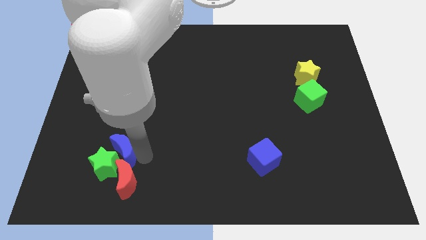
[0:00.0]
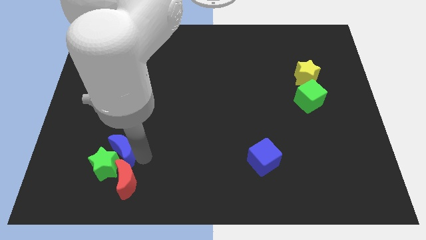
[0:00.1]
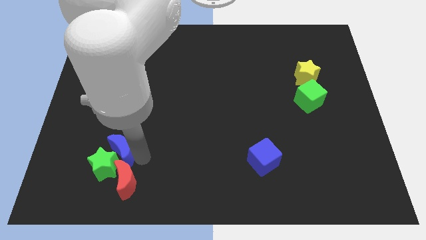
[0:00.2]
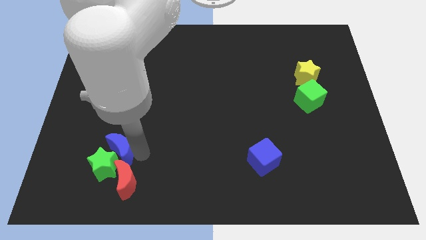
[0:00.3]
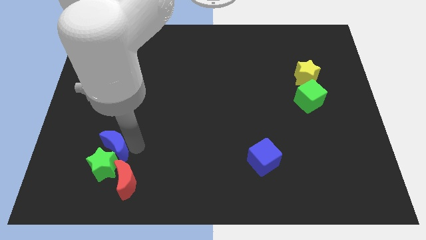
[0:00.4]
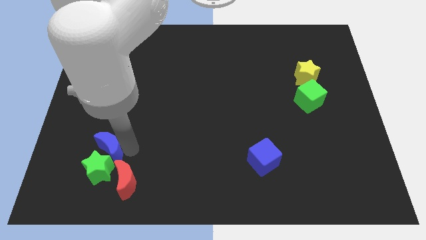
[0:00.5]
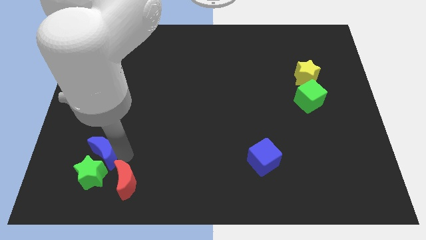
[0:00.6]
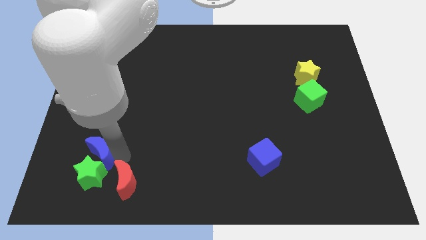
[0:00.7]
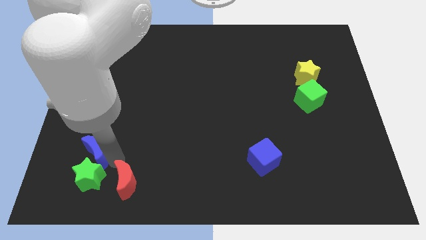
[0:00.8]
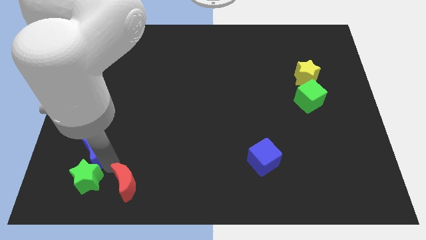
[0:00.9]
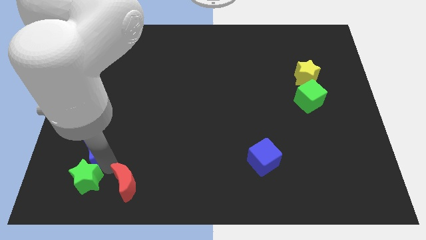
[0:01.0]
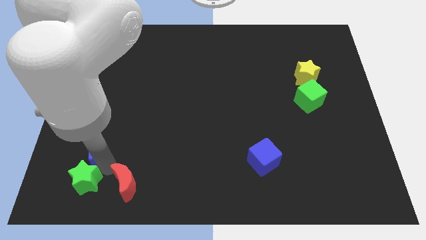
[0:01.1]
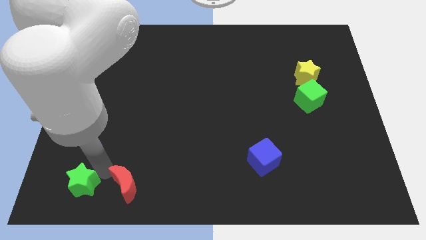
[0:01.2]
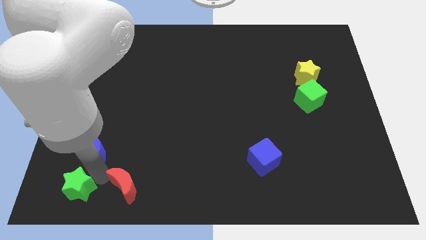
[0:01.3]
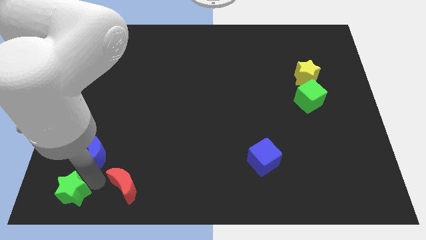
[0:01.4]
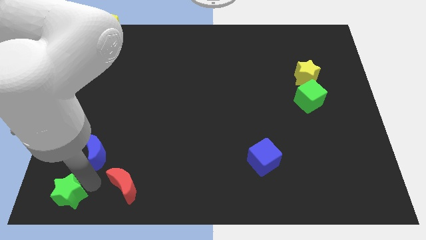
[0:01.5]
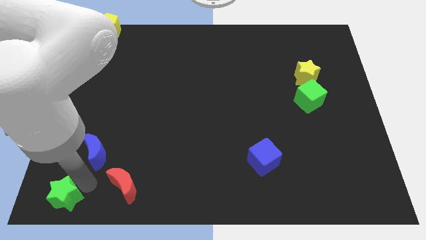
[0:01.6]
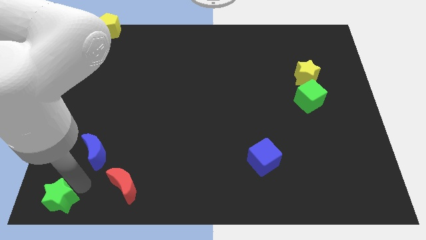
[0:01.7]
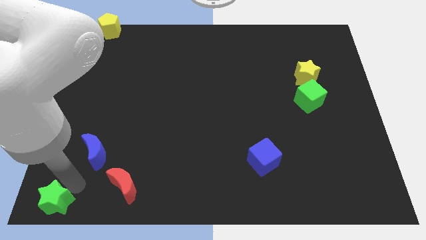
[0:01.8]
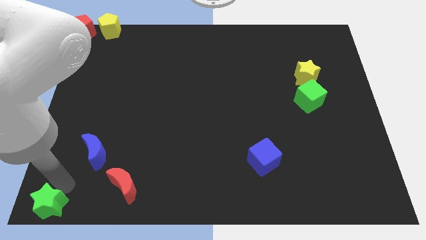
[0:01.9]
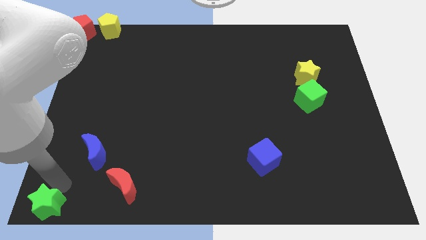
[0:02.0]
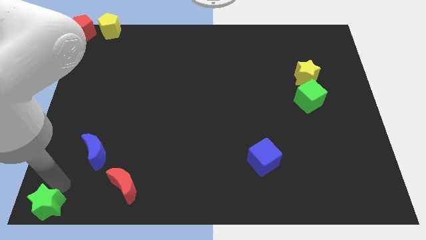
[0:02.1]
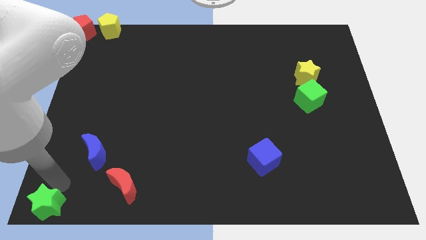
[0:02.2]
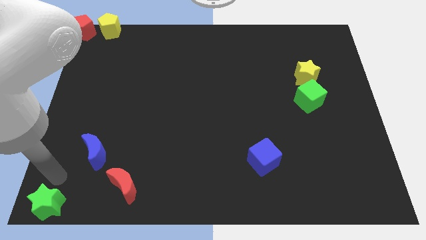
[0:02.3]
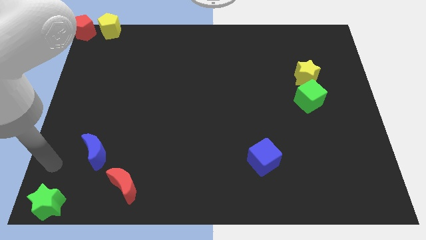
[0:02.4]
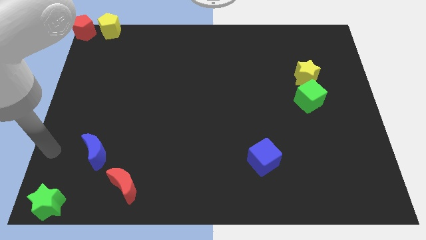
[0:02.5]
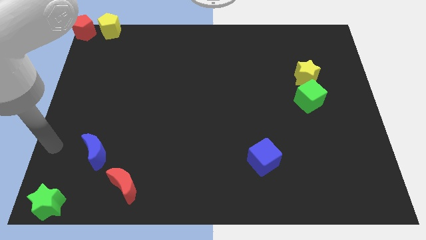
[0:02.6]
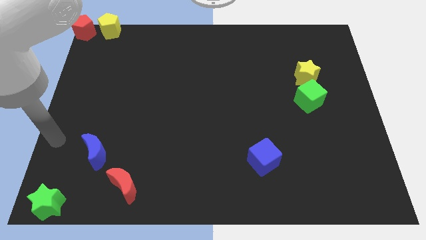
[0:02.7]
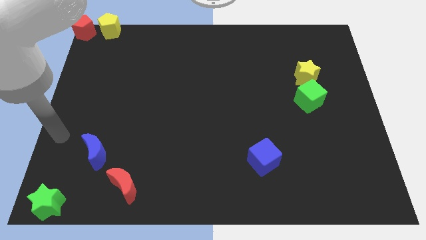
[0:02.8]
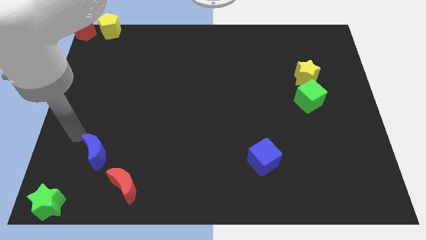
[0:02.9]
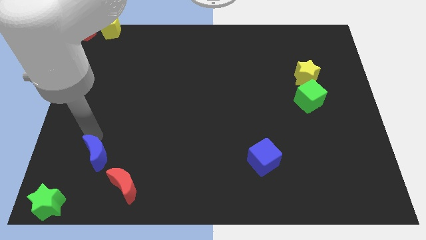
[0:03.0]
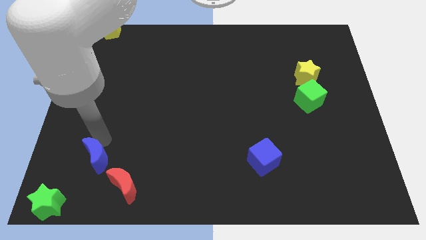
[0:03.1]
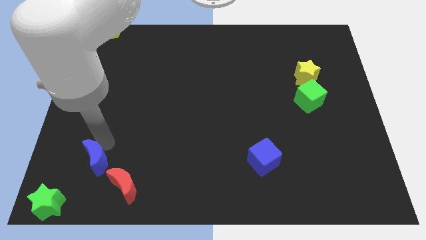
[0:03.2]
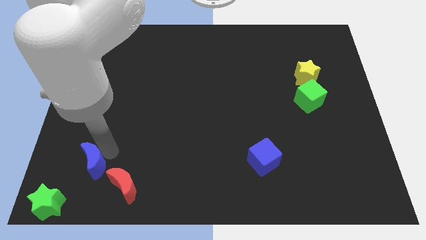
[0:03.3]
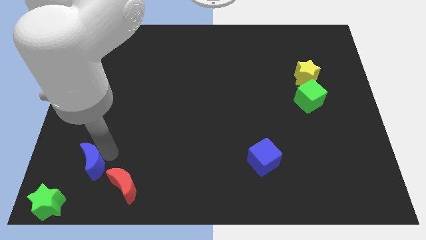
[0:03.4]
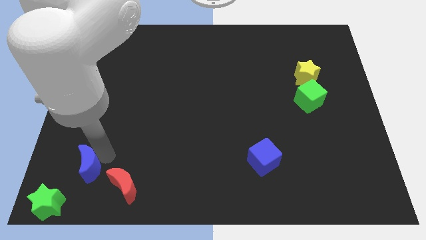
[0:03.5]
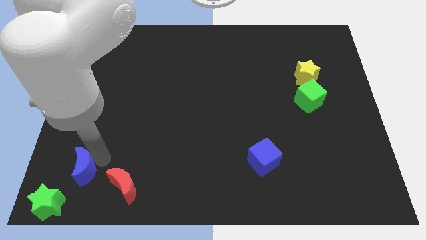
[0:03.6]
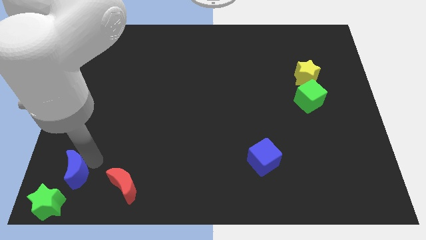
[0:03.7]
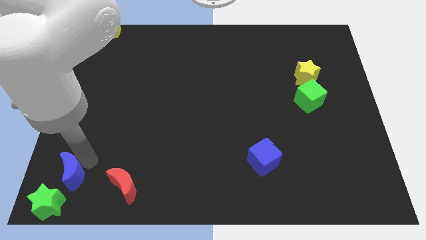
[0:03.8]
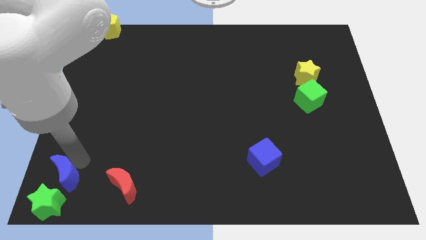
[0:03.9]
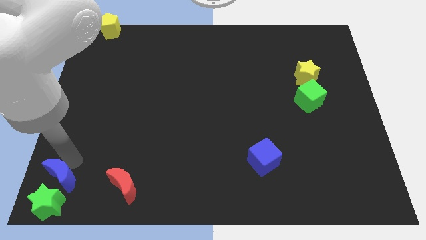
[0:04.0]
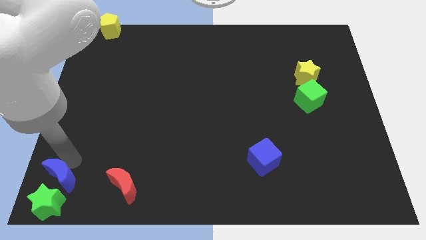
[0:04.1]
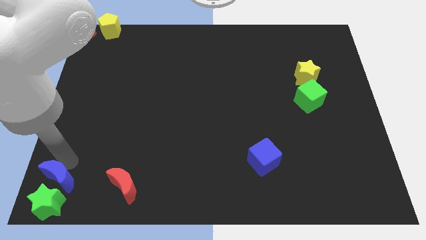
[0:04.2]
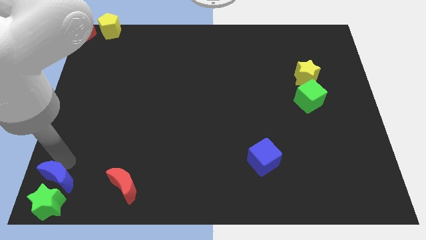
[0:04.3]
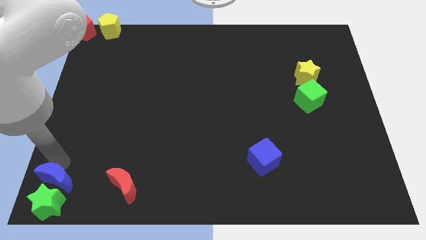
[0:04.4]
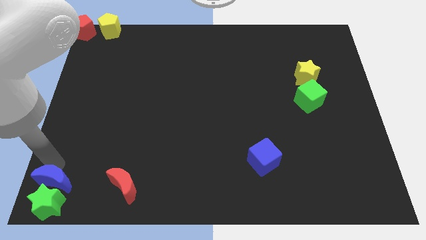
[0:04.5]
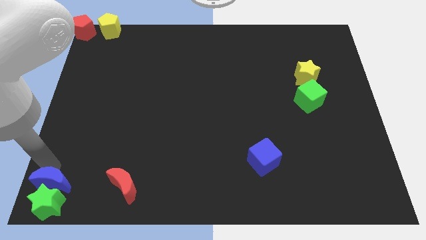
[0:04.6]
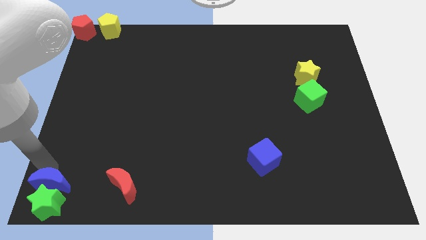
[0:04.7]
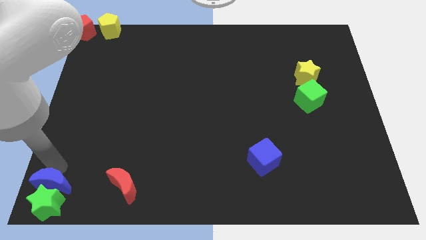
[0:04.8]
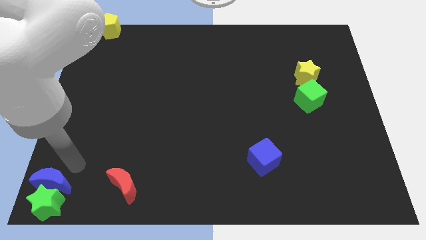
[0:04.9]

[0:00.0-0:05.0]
place the green star and the blue moon at the bottom left corner

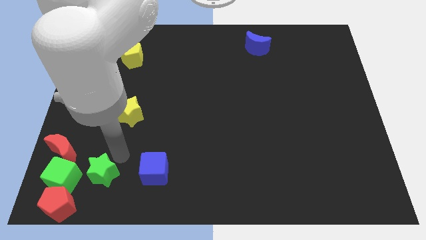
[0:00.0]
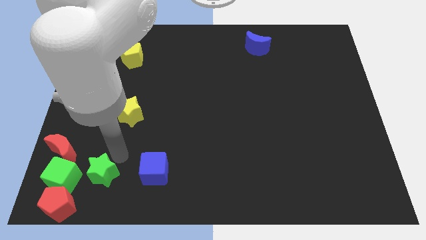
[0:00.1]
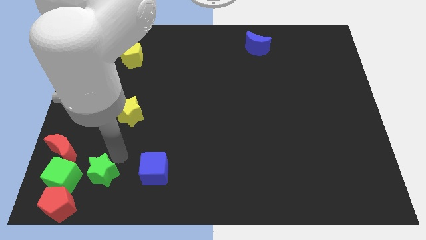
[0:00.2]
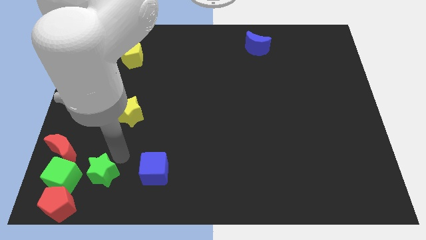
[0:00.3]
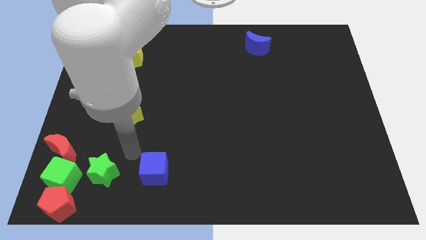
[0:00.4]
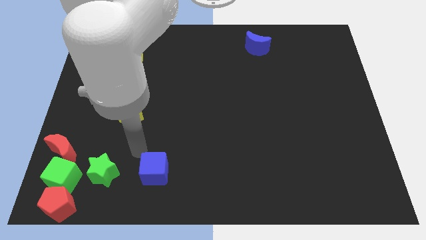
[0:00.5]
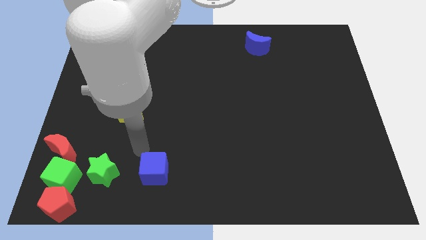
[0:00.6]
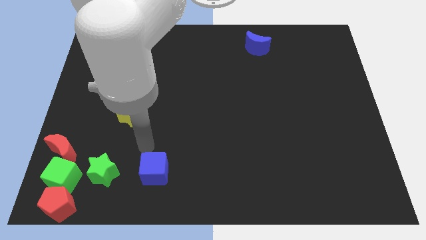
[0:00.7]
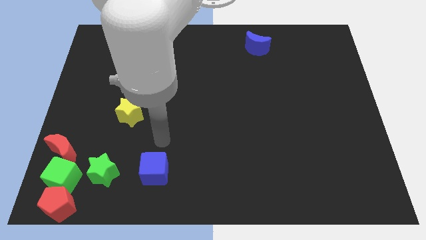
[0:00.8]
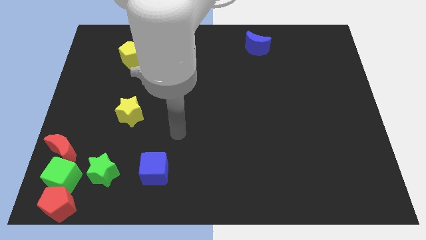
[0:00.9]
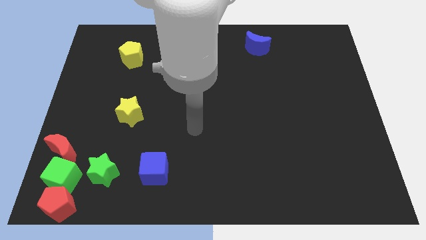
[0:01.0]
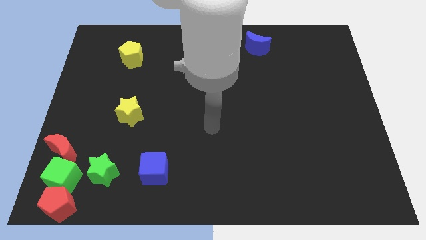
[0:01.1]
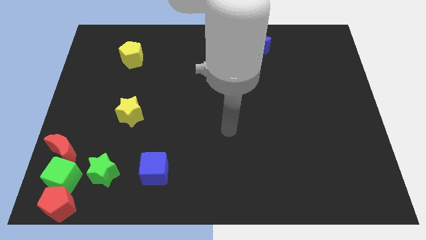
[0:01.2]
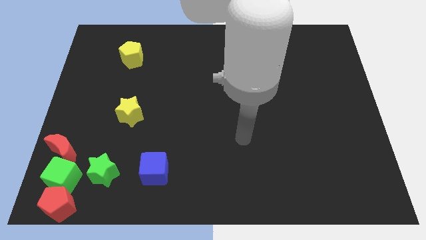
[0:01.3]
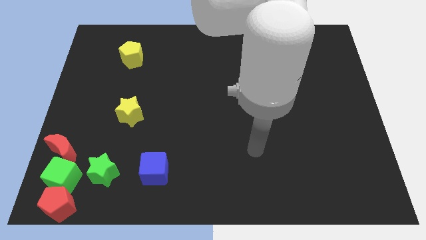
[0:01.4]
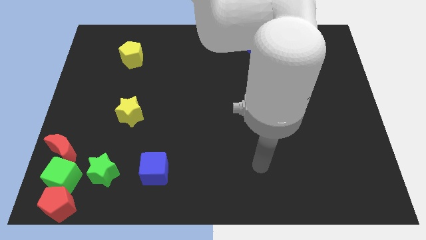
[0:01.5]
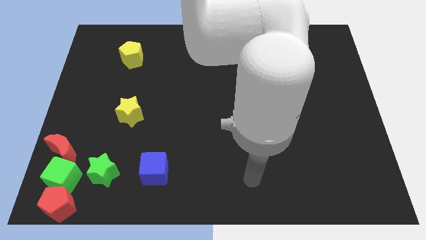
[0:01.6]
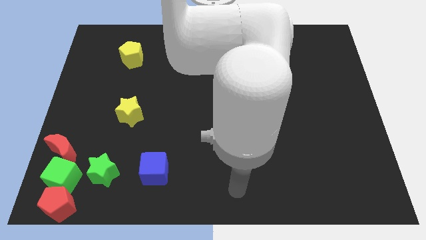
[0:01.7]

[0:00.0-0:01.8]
move your arm away from the green star

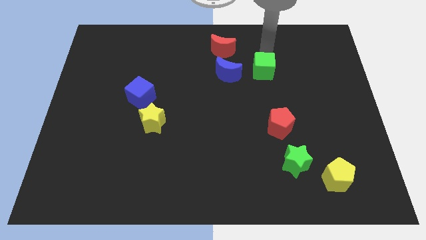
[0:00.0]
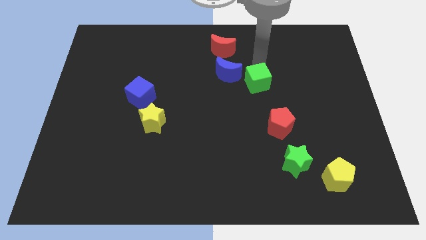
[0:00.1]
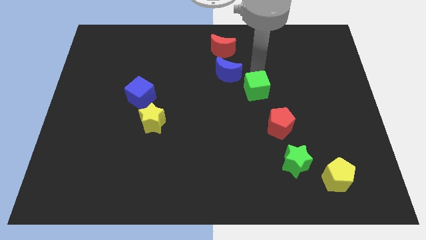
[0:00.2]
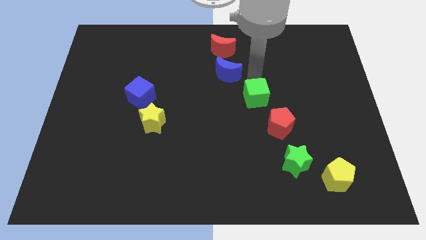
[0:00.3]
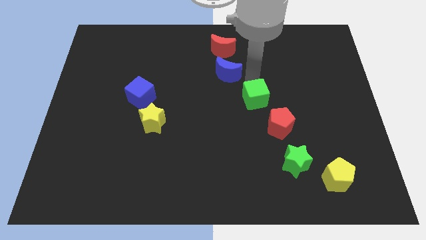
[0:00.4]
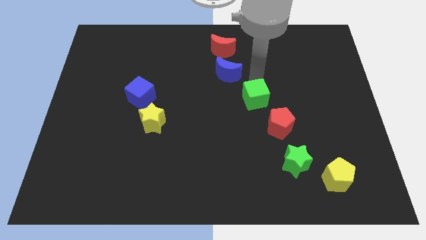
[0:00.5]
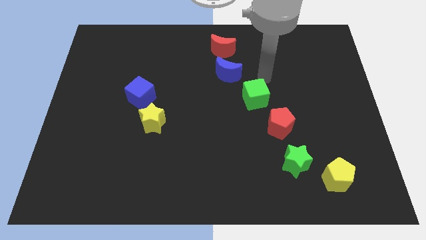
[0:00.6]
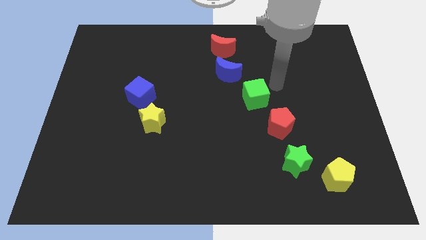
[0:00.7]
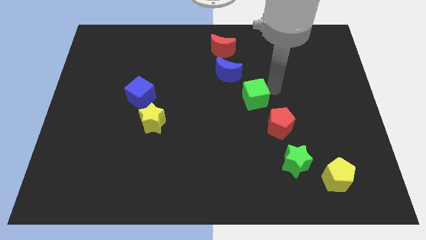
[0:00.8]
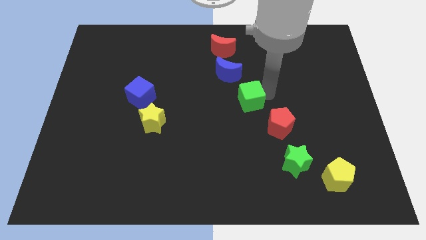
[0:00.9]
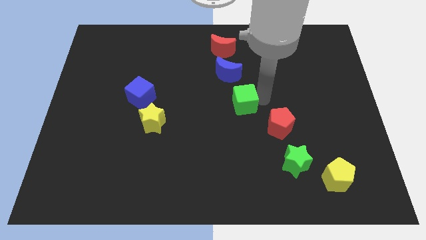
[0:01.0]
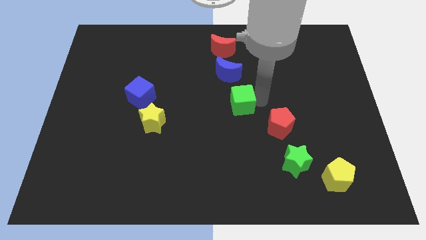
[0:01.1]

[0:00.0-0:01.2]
slide the green cube diagonally bottom right to the blue moon

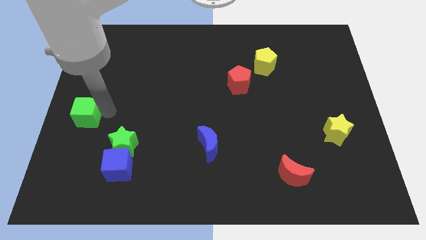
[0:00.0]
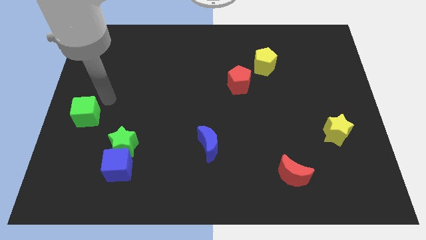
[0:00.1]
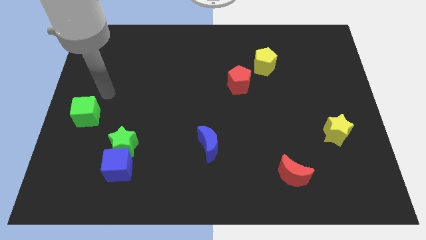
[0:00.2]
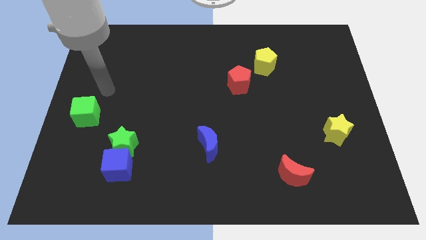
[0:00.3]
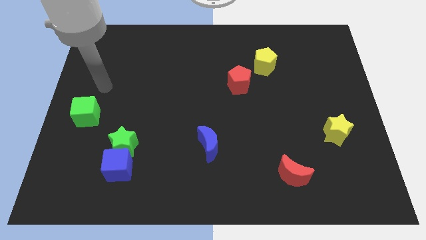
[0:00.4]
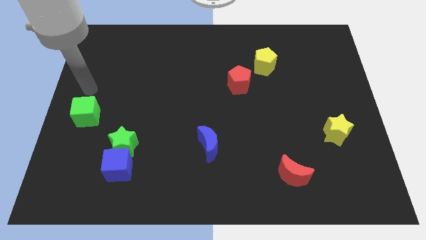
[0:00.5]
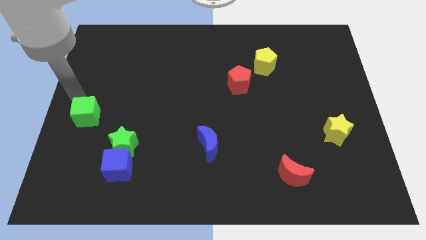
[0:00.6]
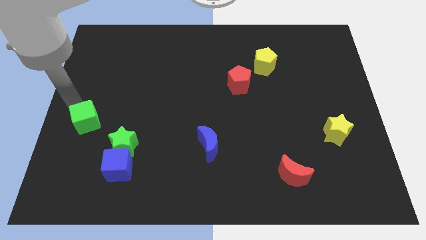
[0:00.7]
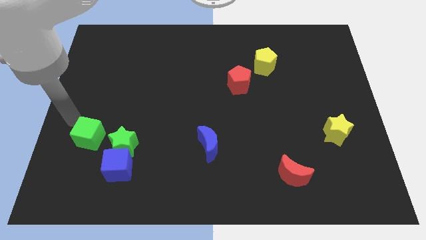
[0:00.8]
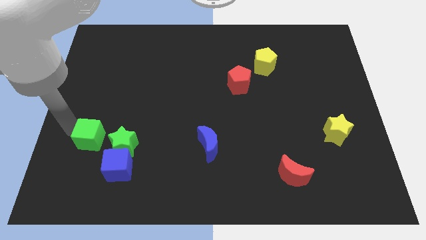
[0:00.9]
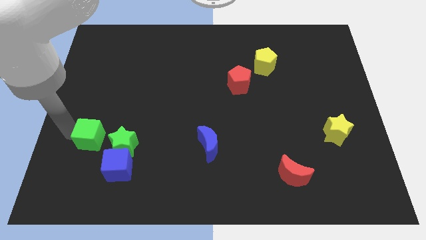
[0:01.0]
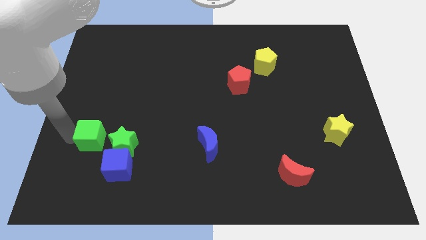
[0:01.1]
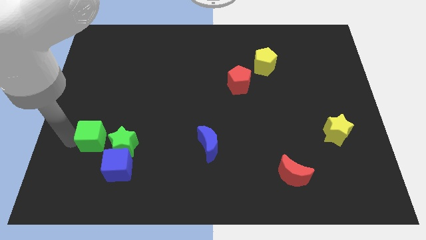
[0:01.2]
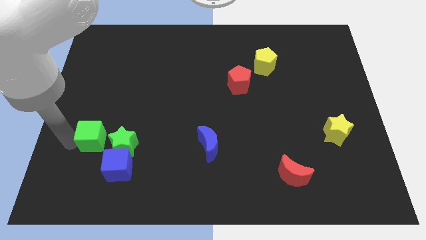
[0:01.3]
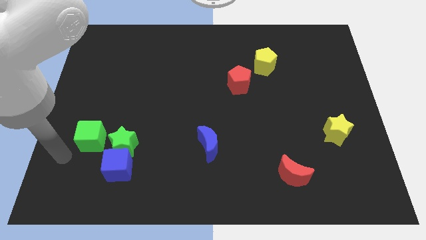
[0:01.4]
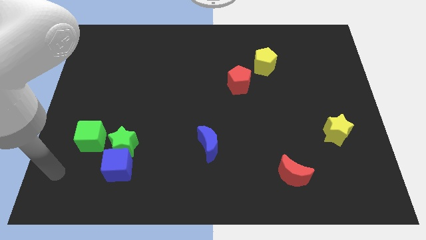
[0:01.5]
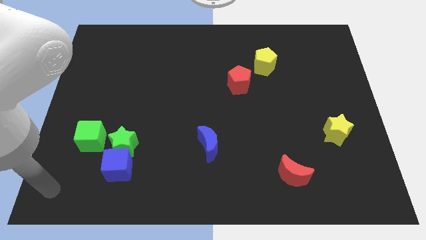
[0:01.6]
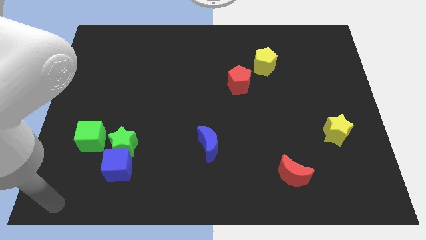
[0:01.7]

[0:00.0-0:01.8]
move the green cube to the right of the green star
